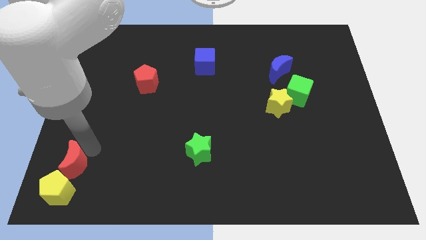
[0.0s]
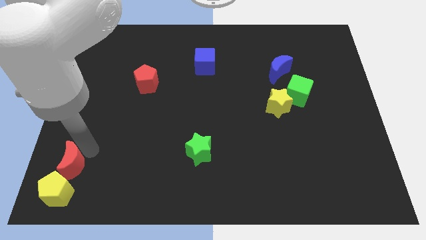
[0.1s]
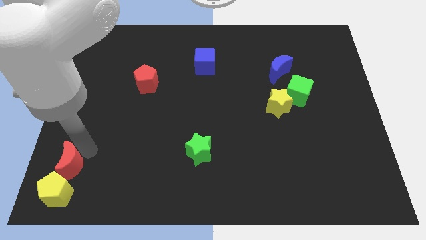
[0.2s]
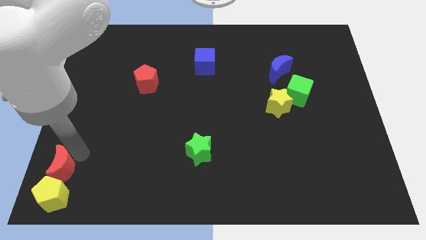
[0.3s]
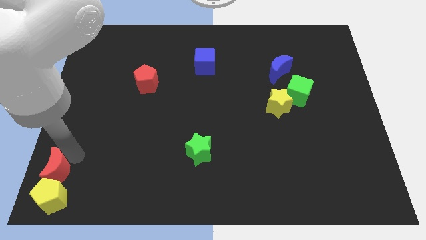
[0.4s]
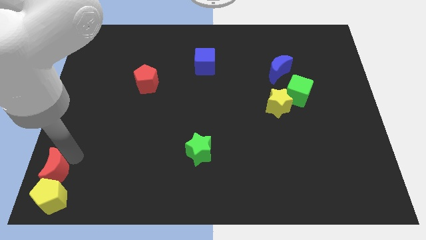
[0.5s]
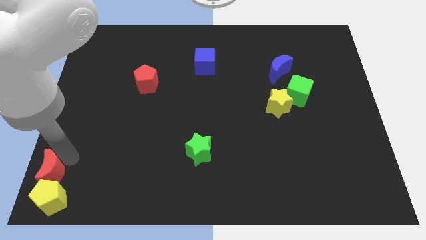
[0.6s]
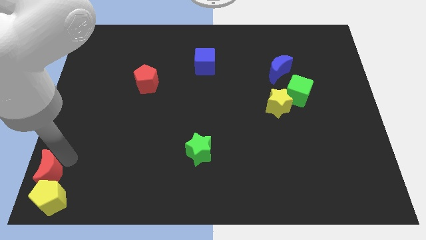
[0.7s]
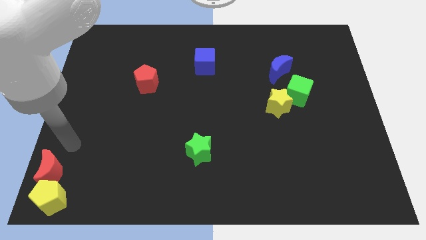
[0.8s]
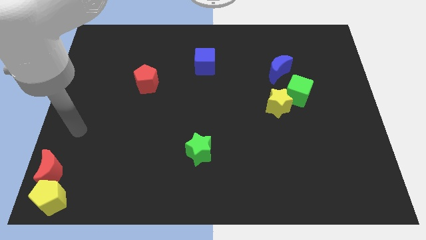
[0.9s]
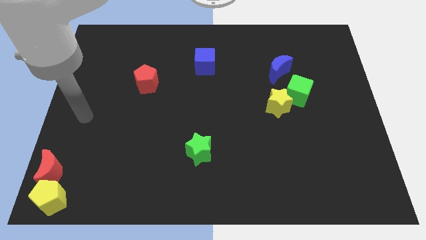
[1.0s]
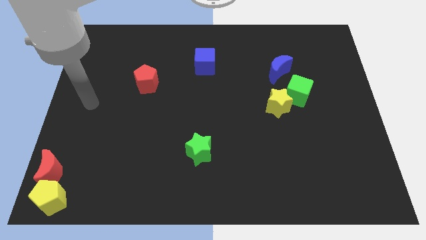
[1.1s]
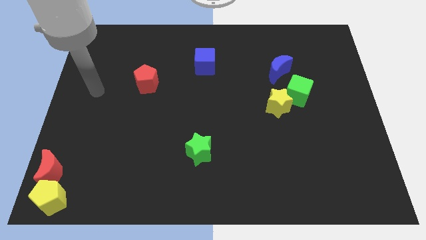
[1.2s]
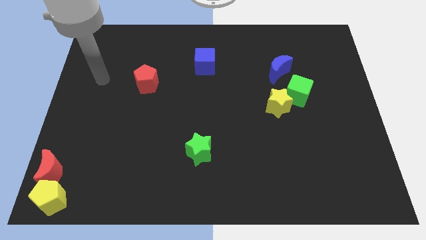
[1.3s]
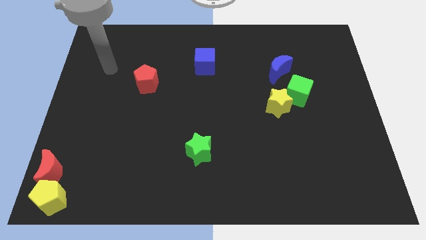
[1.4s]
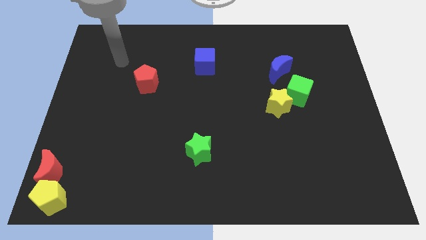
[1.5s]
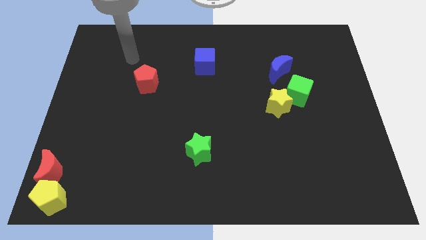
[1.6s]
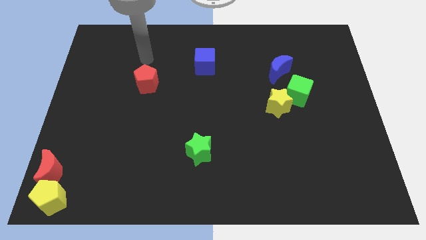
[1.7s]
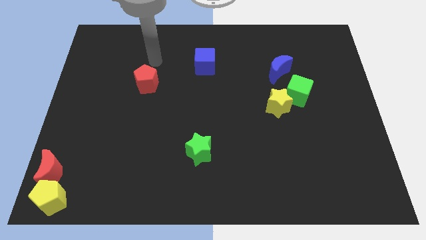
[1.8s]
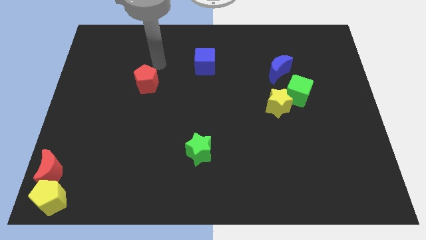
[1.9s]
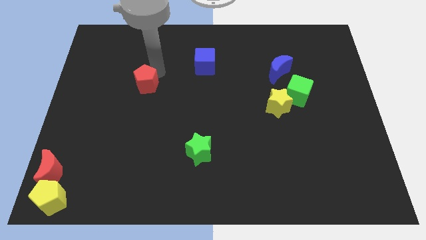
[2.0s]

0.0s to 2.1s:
slightly push the yellow pentagon with red moon

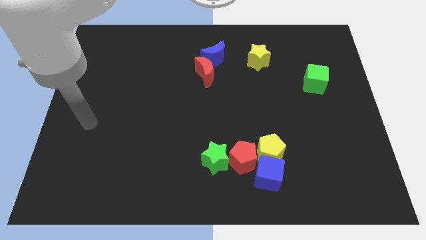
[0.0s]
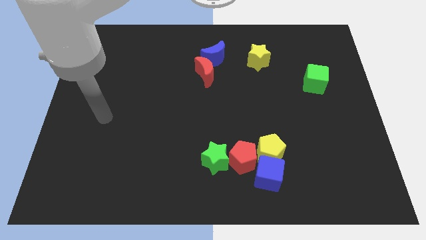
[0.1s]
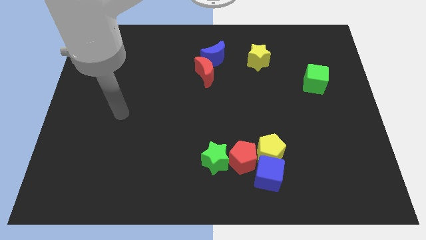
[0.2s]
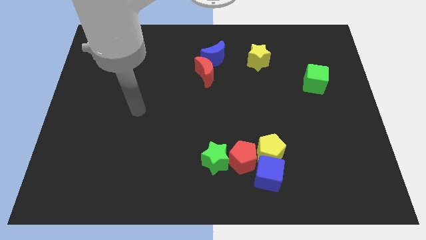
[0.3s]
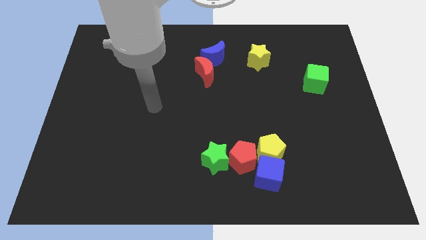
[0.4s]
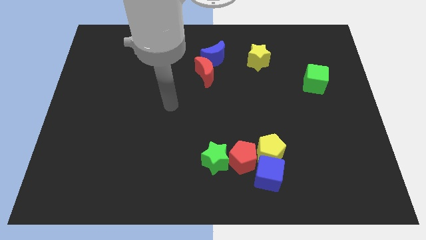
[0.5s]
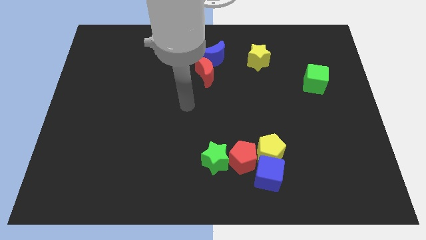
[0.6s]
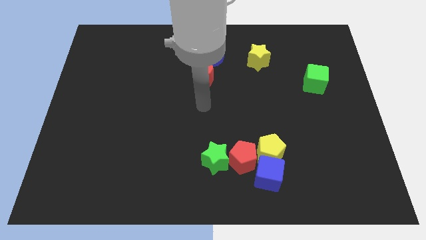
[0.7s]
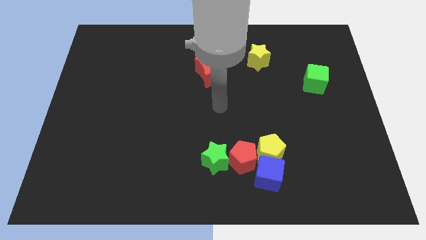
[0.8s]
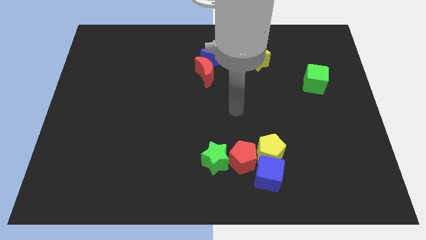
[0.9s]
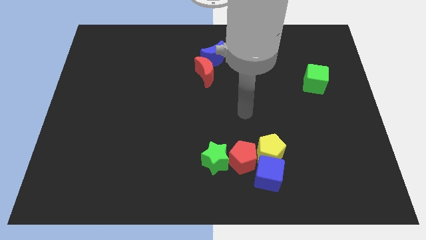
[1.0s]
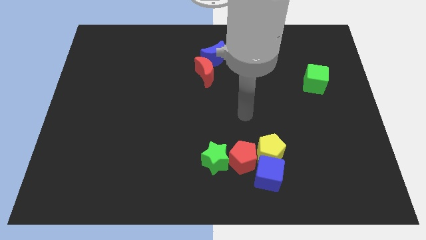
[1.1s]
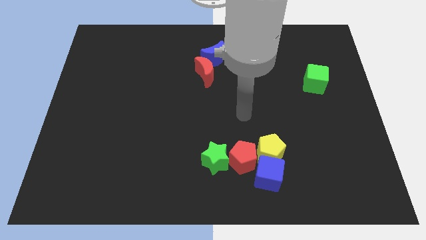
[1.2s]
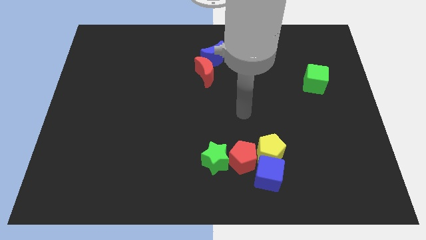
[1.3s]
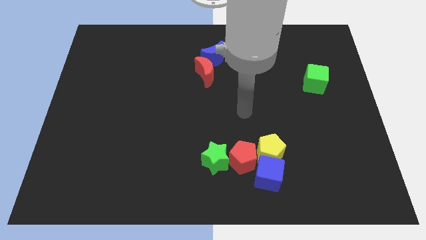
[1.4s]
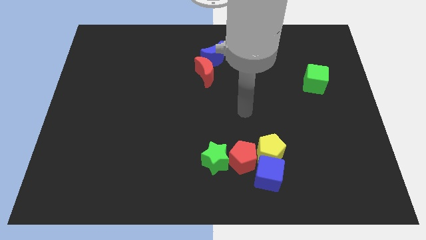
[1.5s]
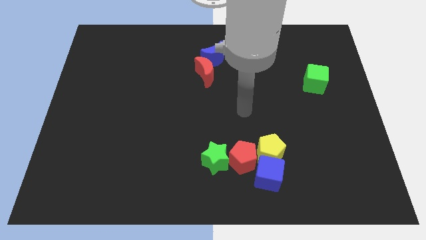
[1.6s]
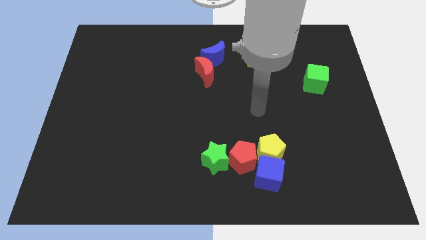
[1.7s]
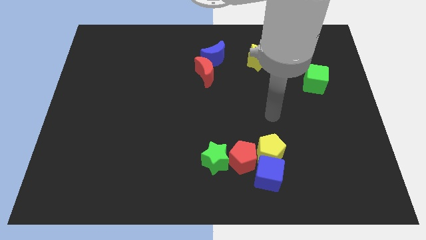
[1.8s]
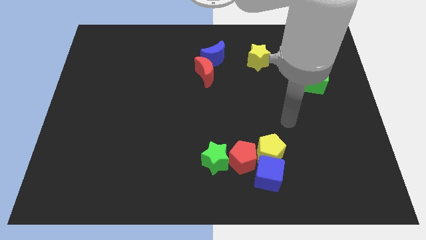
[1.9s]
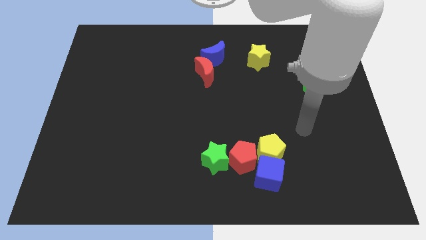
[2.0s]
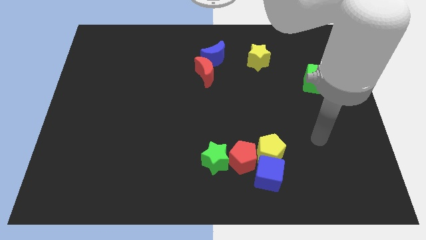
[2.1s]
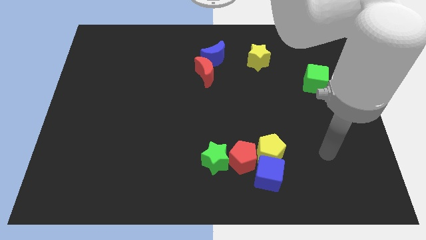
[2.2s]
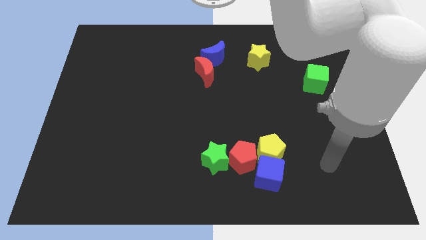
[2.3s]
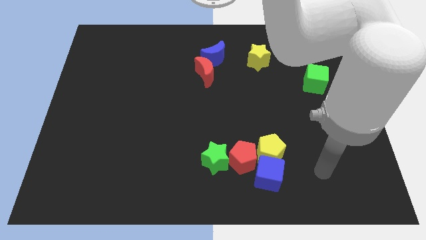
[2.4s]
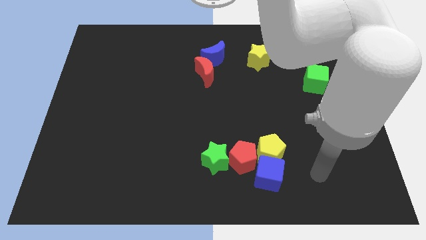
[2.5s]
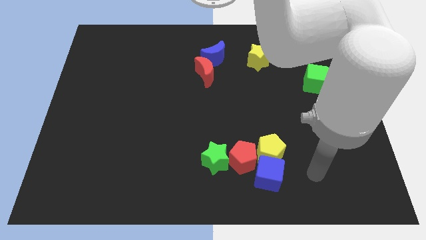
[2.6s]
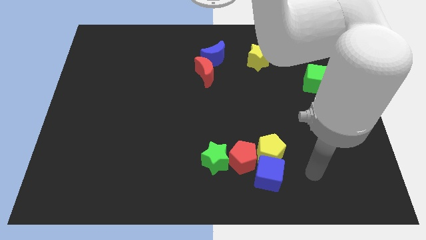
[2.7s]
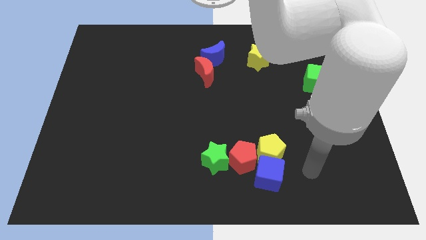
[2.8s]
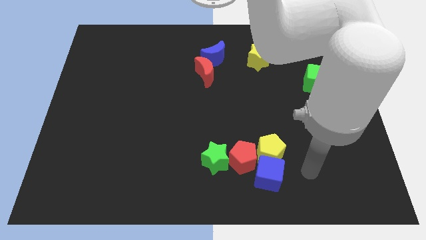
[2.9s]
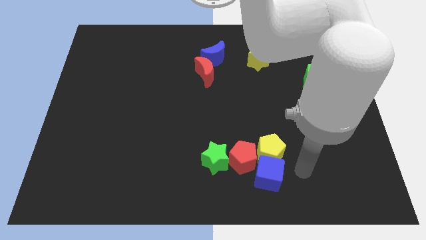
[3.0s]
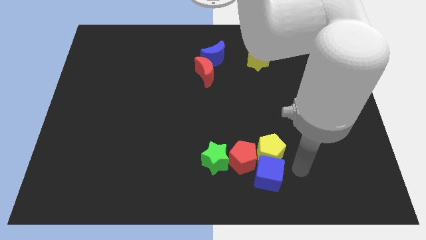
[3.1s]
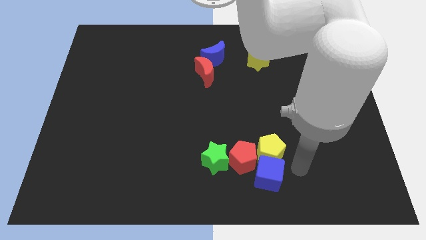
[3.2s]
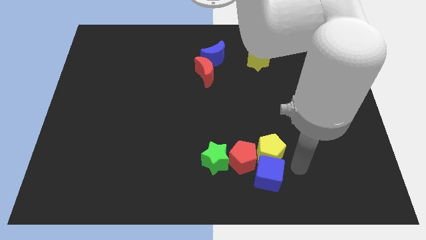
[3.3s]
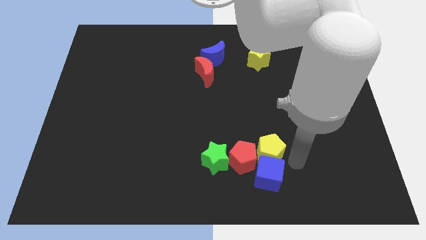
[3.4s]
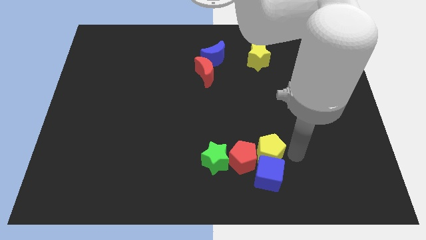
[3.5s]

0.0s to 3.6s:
move your arm to the right of the yellow pentagon

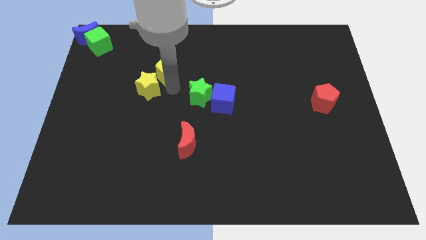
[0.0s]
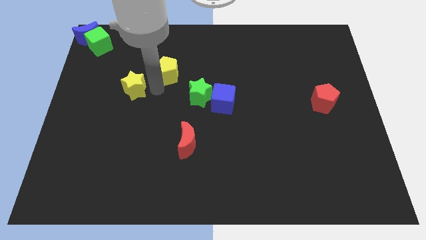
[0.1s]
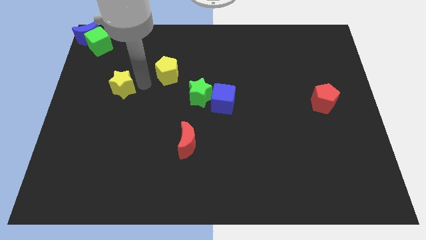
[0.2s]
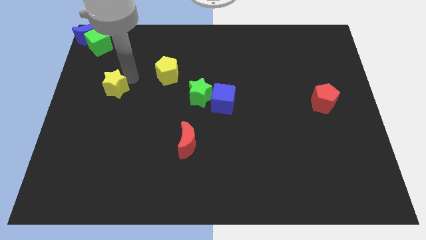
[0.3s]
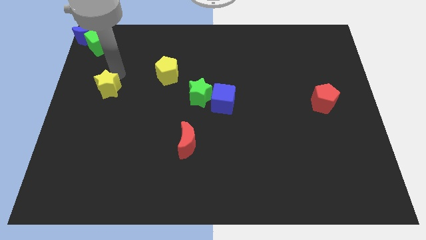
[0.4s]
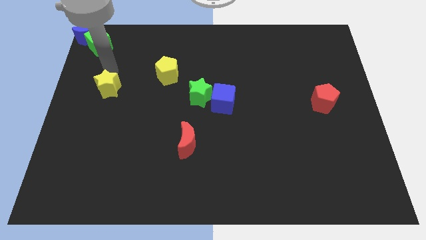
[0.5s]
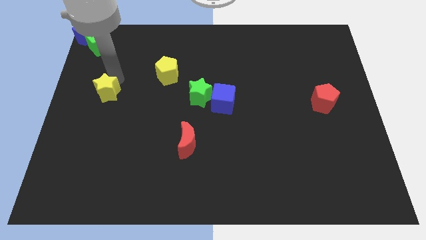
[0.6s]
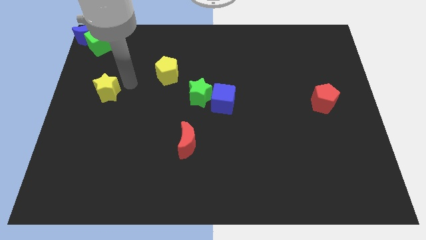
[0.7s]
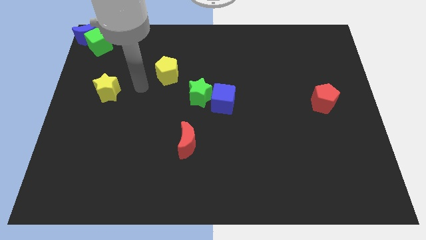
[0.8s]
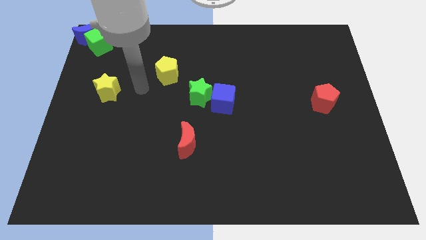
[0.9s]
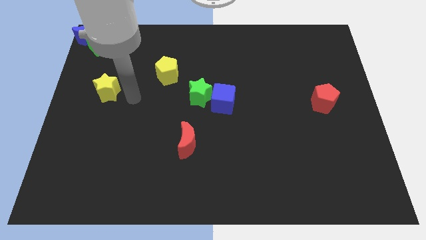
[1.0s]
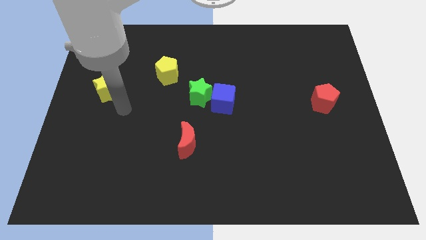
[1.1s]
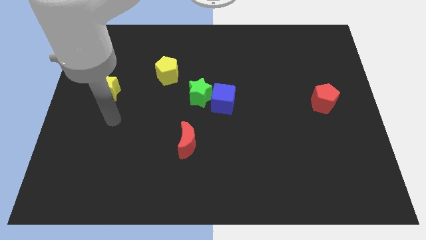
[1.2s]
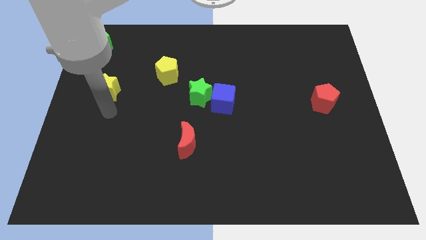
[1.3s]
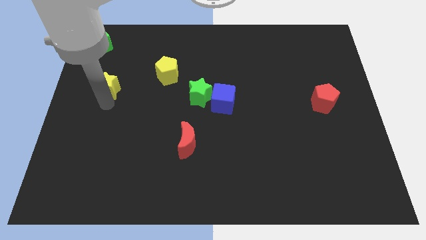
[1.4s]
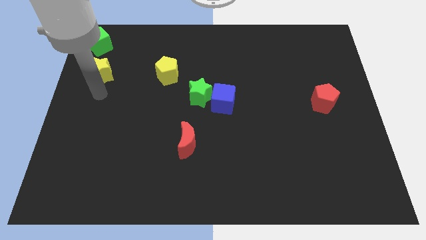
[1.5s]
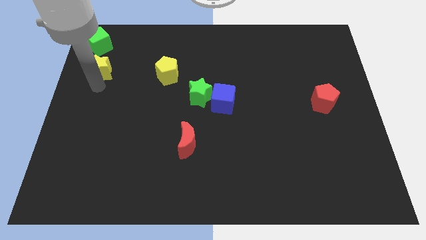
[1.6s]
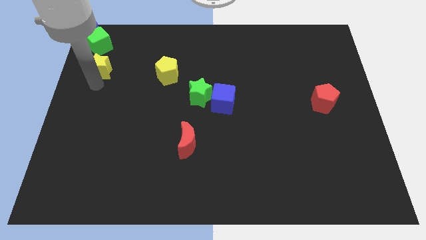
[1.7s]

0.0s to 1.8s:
separate the yellow star towards bottom of green cube

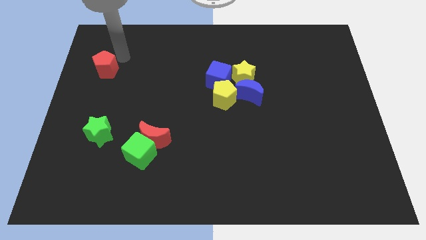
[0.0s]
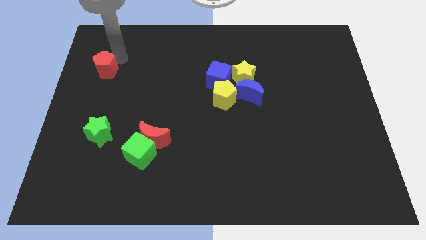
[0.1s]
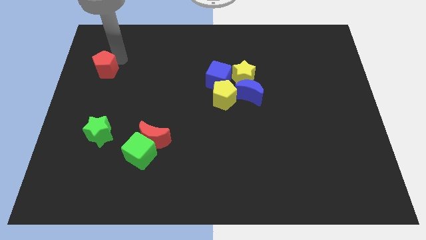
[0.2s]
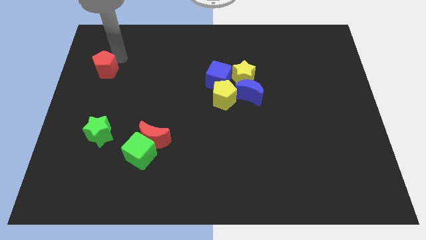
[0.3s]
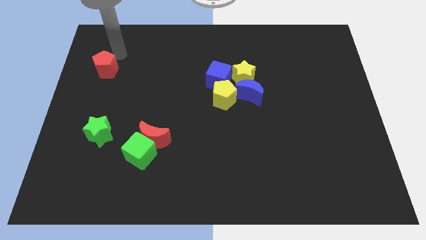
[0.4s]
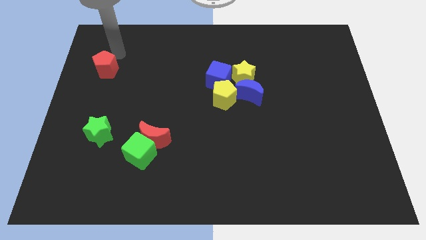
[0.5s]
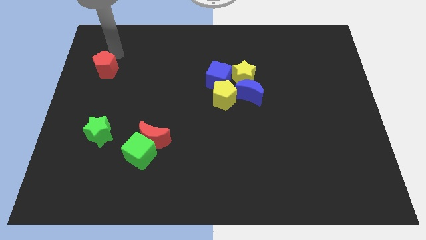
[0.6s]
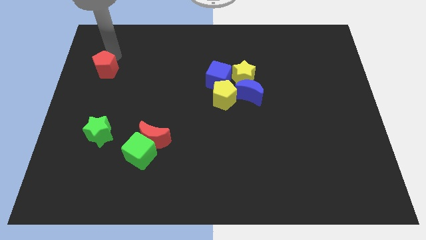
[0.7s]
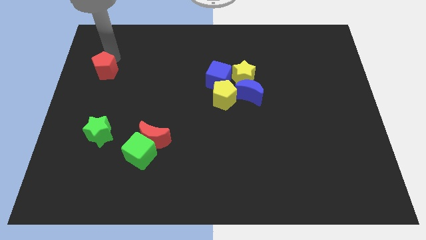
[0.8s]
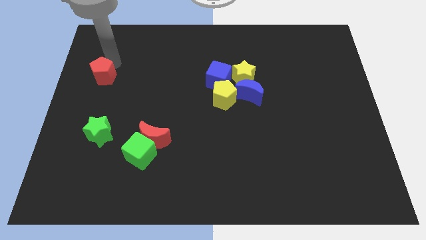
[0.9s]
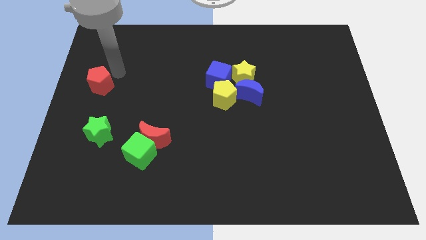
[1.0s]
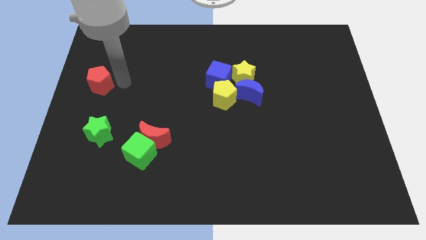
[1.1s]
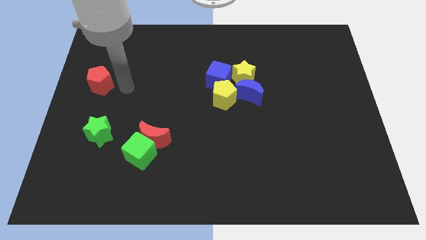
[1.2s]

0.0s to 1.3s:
slightly move down the red pentagon

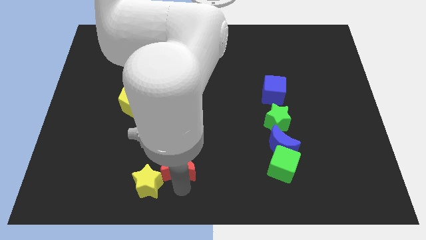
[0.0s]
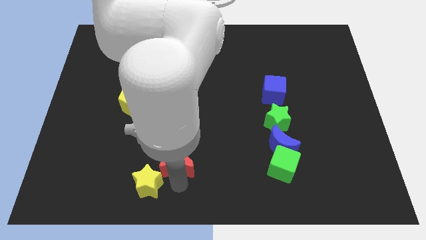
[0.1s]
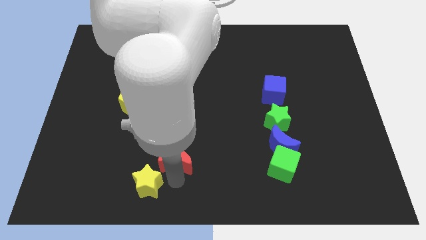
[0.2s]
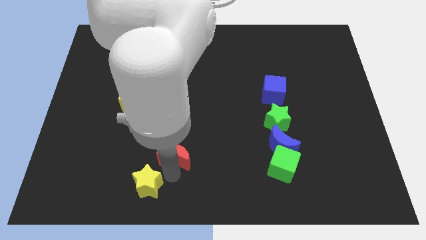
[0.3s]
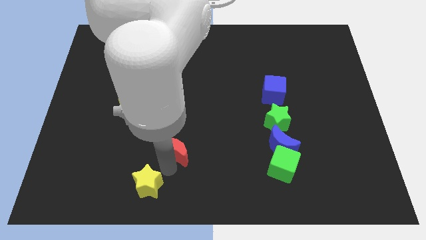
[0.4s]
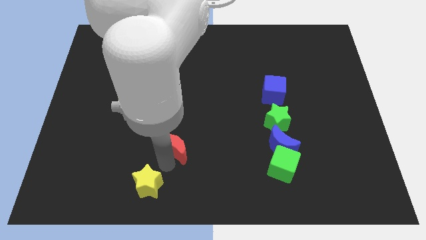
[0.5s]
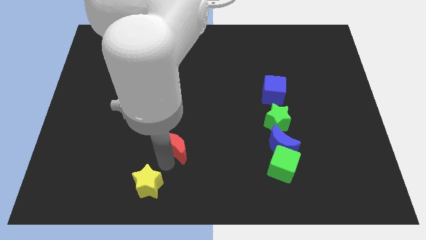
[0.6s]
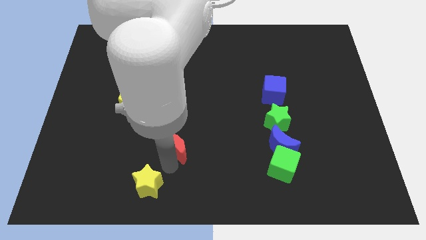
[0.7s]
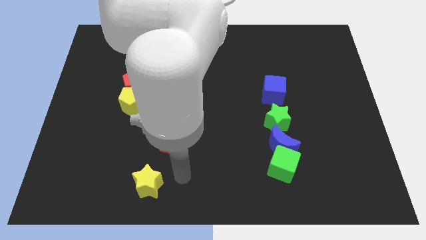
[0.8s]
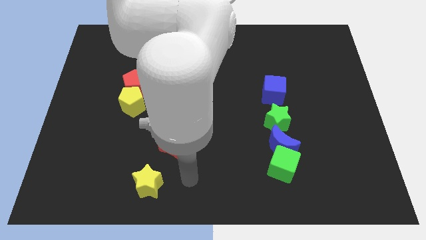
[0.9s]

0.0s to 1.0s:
separate the red crescent from the yellow star
